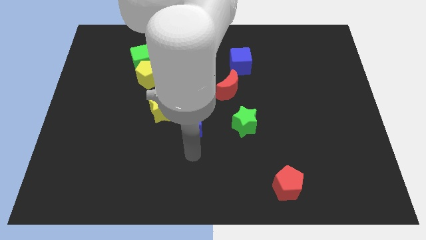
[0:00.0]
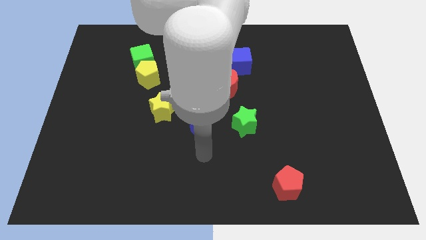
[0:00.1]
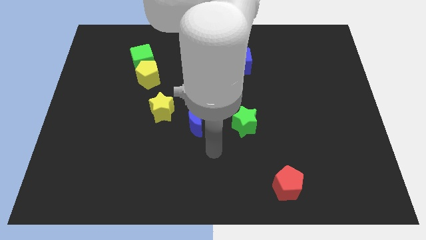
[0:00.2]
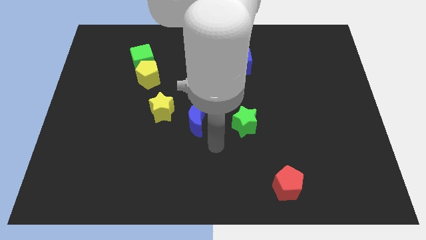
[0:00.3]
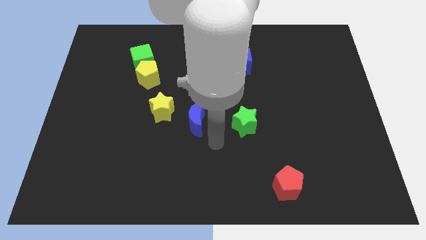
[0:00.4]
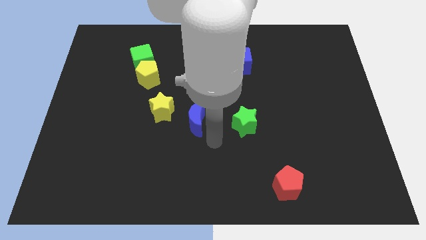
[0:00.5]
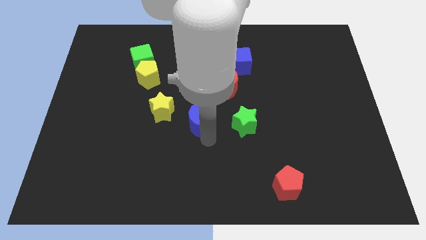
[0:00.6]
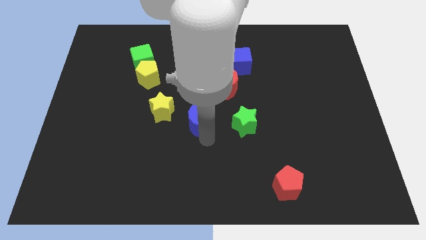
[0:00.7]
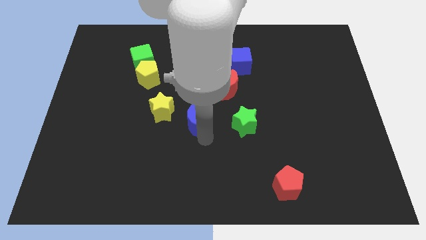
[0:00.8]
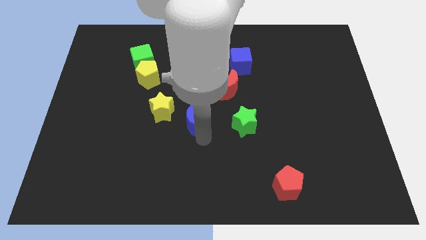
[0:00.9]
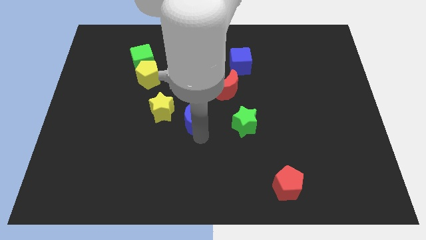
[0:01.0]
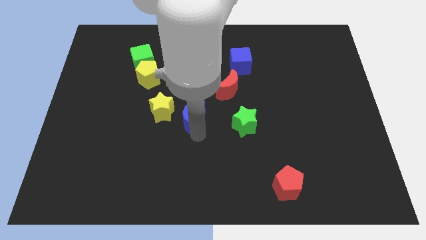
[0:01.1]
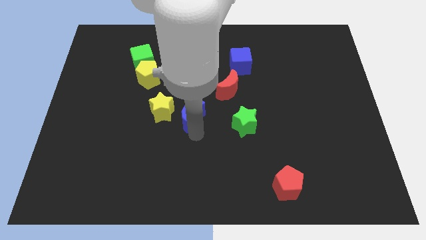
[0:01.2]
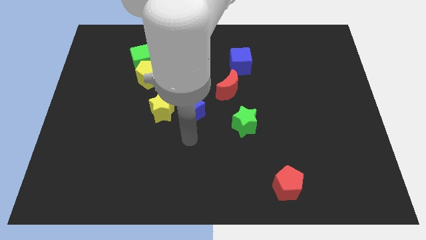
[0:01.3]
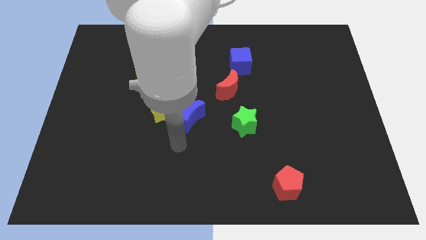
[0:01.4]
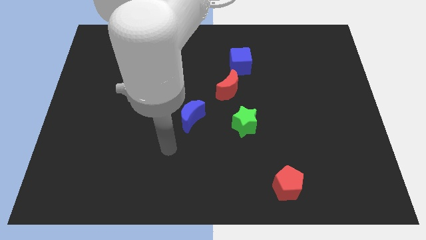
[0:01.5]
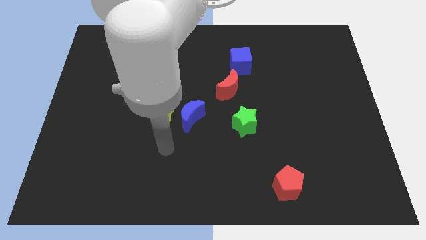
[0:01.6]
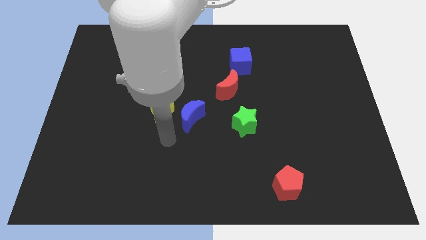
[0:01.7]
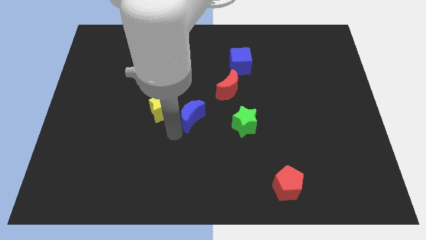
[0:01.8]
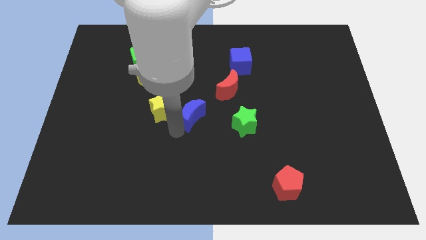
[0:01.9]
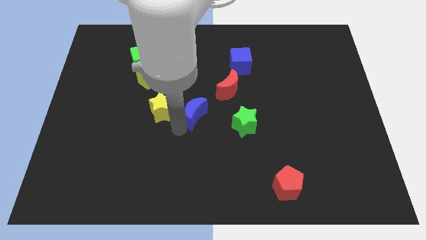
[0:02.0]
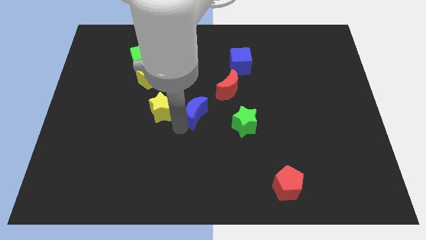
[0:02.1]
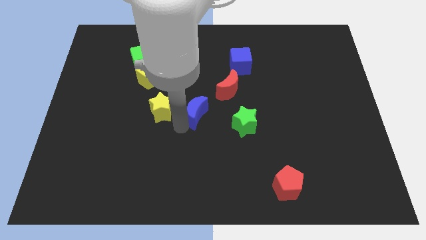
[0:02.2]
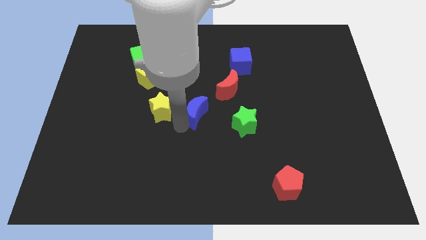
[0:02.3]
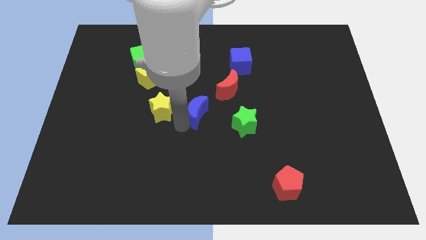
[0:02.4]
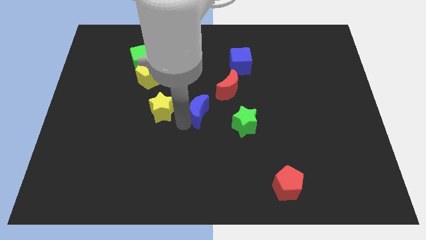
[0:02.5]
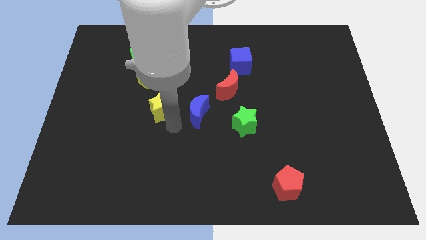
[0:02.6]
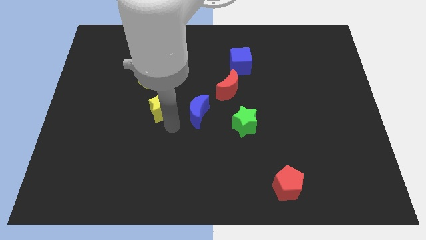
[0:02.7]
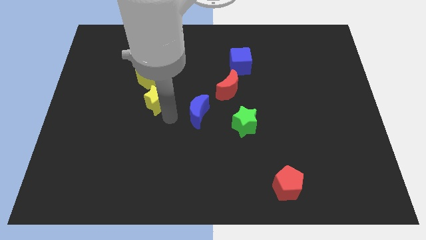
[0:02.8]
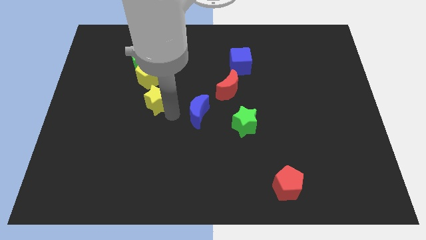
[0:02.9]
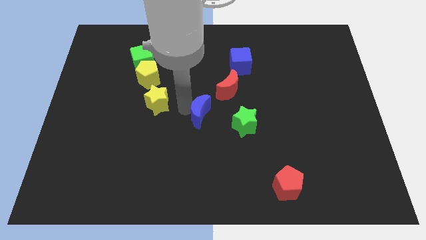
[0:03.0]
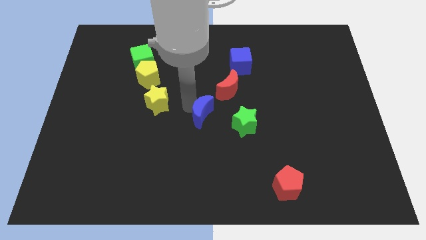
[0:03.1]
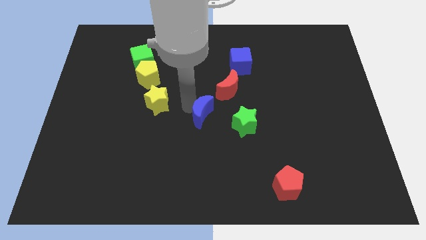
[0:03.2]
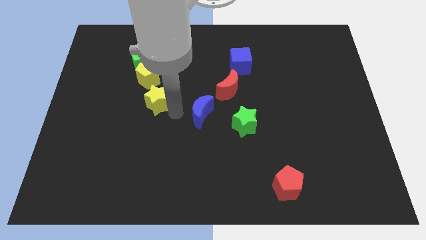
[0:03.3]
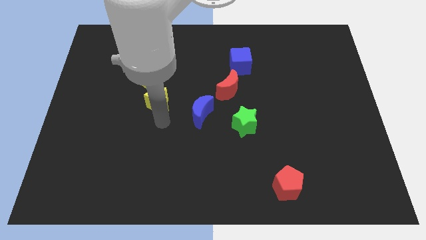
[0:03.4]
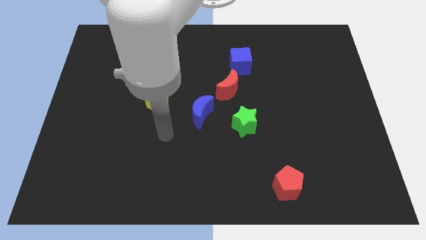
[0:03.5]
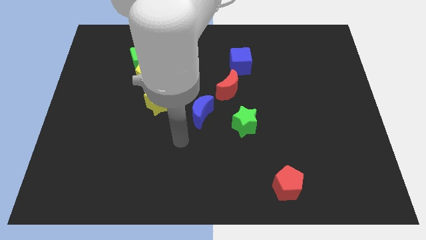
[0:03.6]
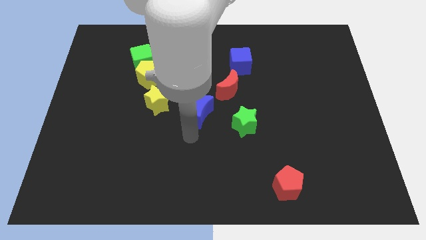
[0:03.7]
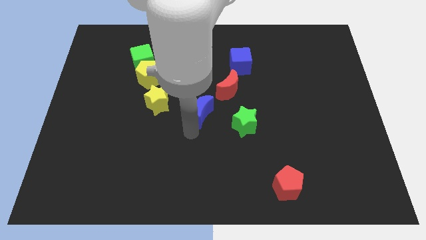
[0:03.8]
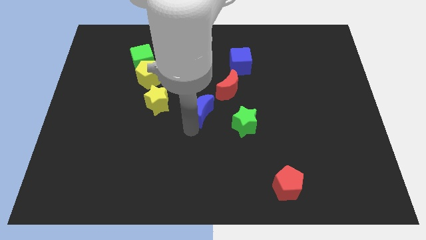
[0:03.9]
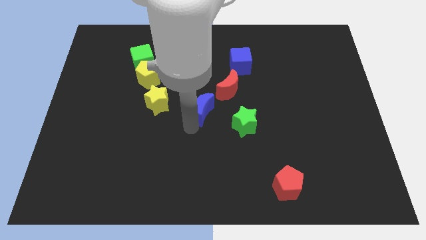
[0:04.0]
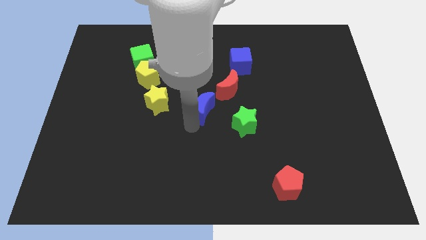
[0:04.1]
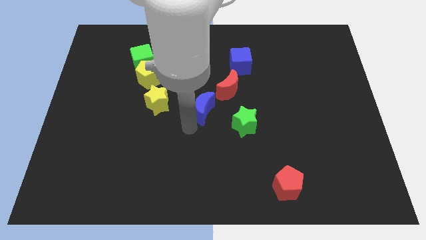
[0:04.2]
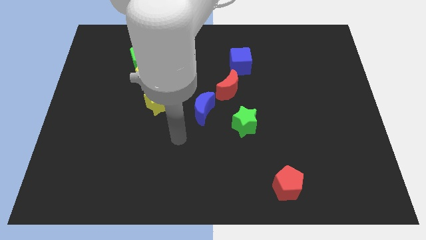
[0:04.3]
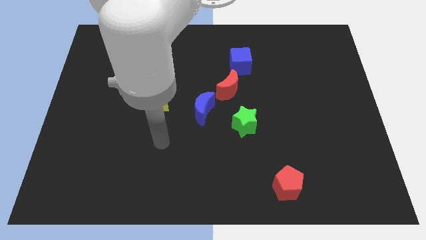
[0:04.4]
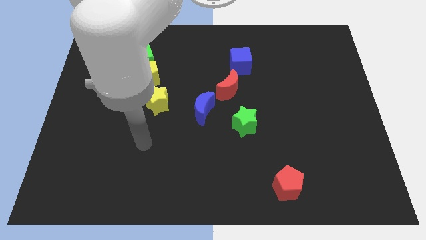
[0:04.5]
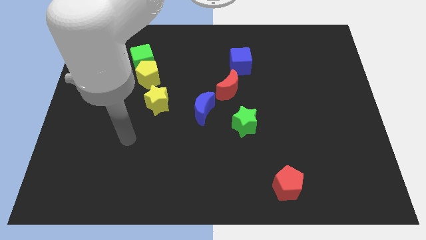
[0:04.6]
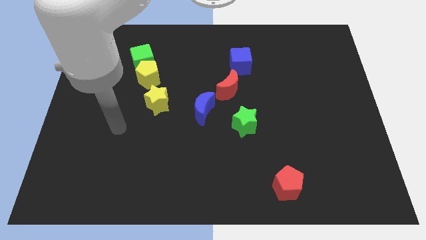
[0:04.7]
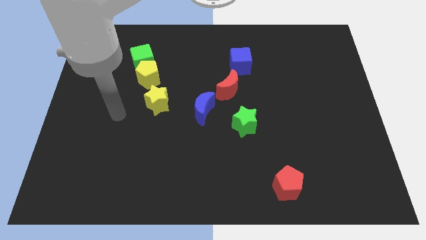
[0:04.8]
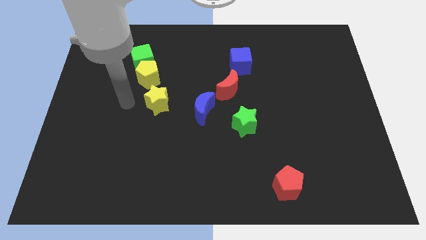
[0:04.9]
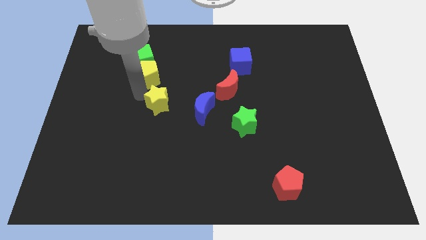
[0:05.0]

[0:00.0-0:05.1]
move blue moon below red moon

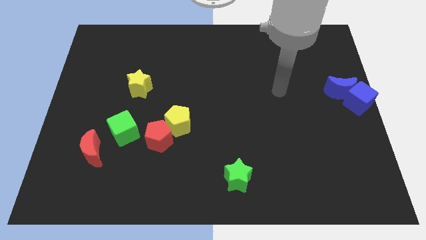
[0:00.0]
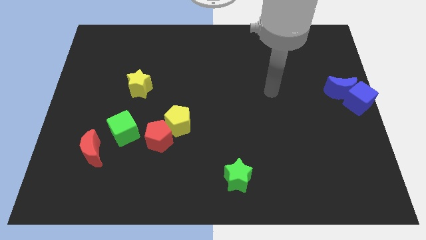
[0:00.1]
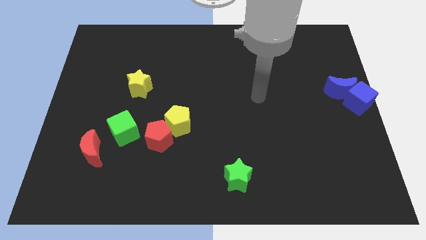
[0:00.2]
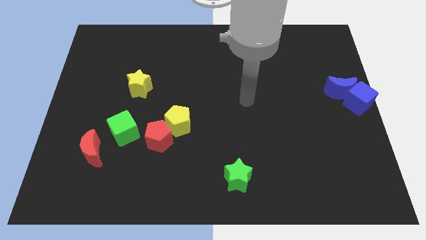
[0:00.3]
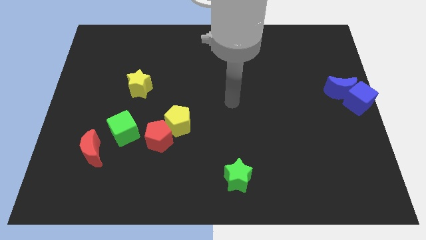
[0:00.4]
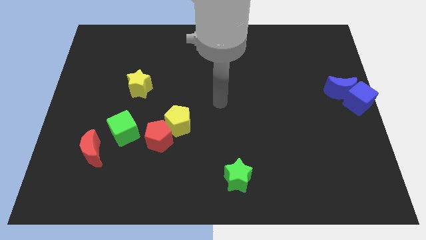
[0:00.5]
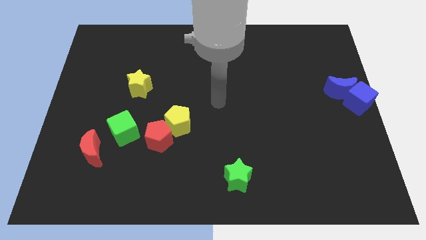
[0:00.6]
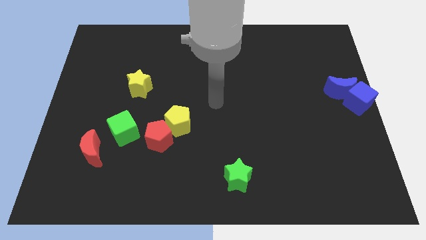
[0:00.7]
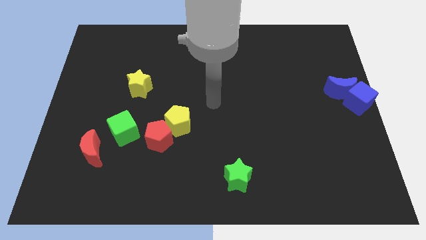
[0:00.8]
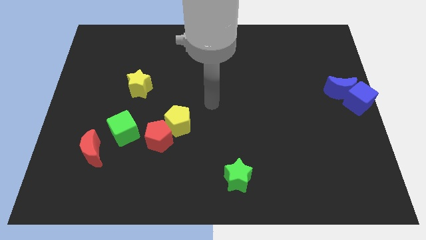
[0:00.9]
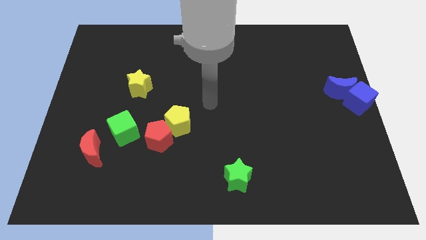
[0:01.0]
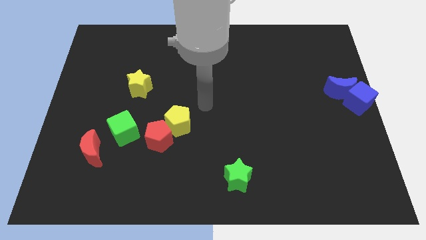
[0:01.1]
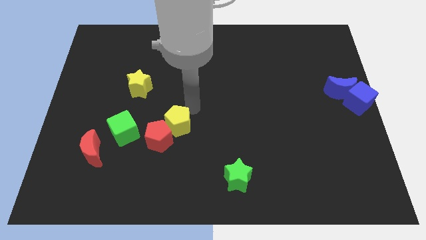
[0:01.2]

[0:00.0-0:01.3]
move your arm towards the yellow pentagon

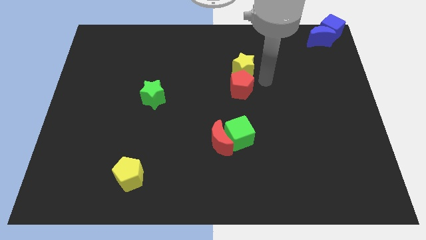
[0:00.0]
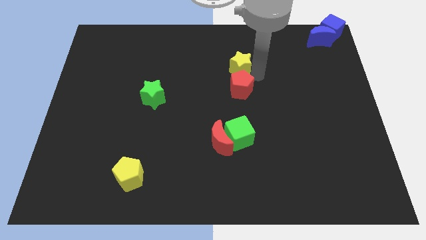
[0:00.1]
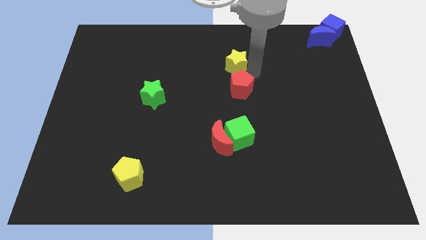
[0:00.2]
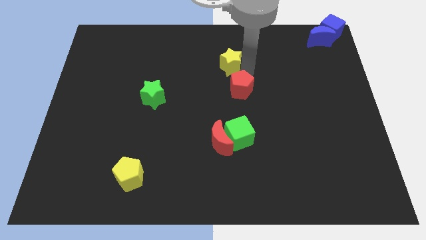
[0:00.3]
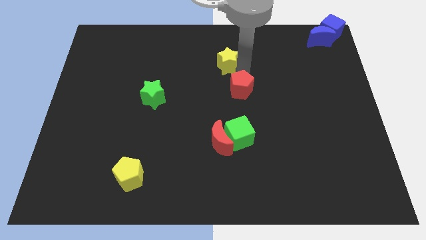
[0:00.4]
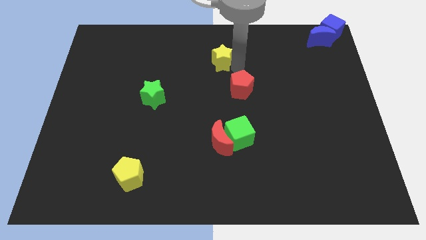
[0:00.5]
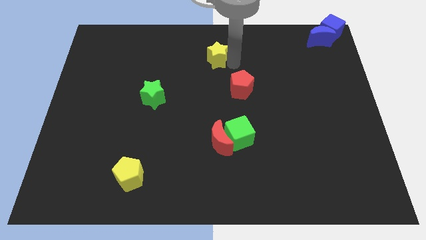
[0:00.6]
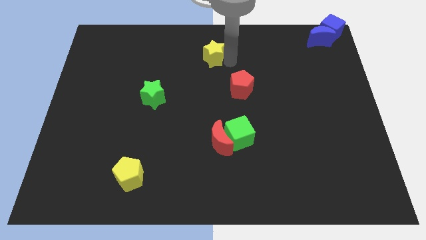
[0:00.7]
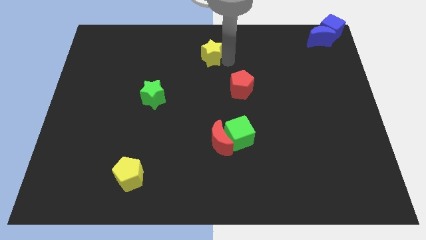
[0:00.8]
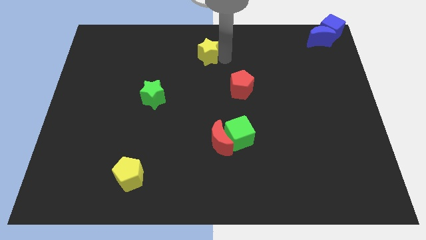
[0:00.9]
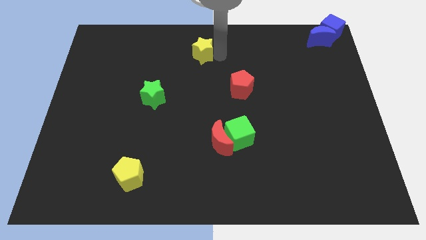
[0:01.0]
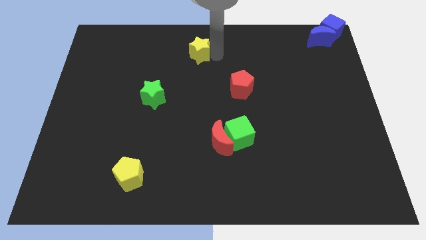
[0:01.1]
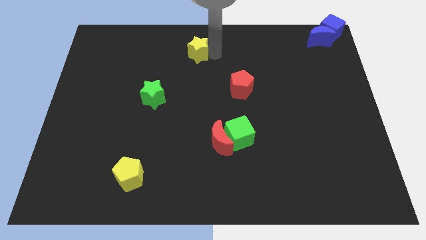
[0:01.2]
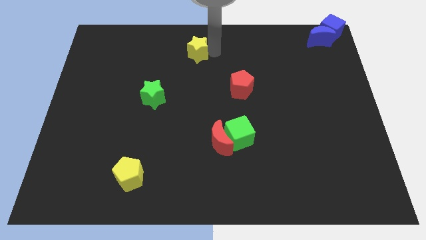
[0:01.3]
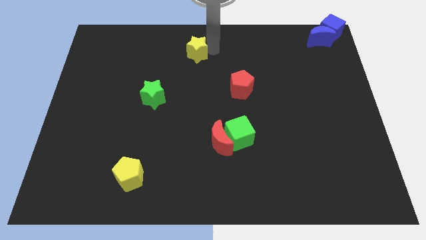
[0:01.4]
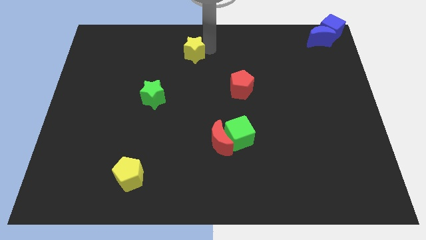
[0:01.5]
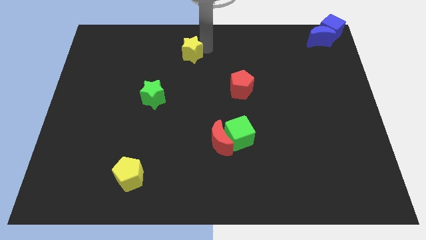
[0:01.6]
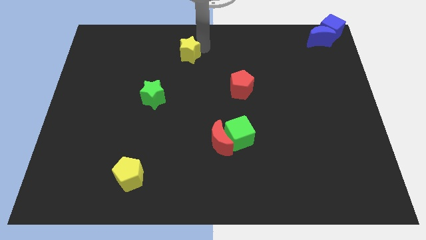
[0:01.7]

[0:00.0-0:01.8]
move the yellow star away from the red pentagon

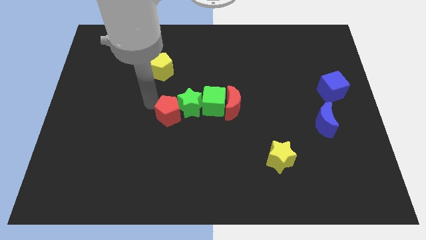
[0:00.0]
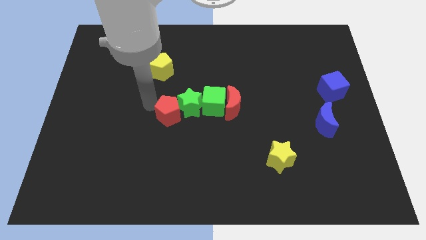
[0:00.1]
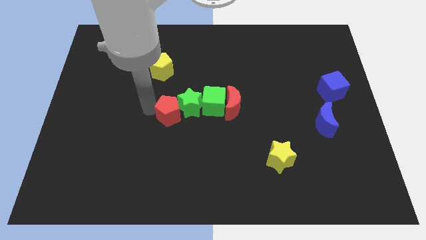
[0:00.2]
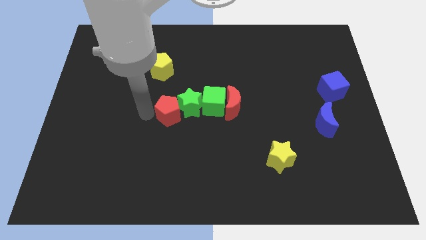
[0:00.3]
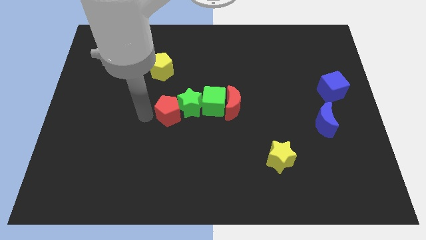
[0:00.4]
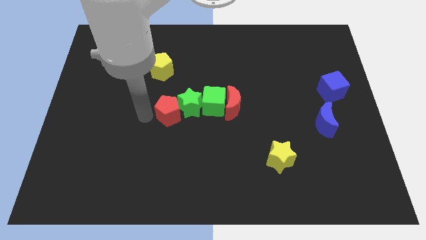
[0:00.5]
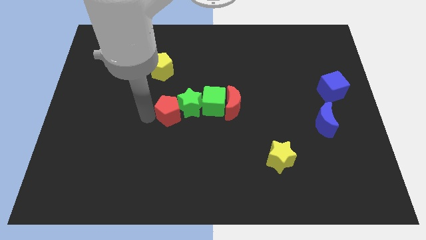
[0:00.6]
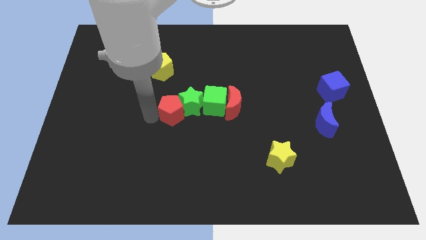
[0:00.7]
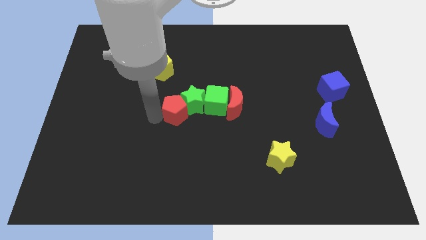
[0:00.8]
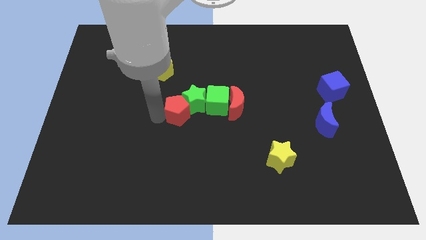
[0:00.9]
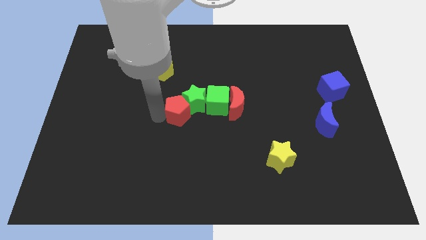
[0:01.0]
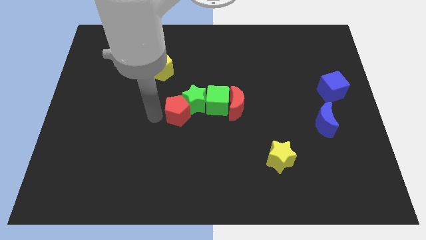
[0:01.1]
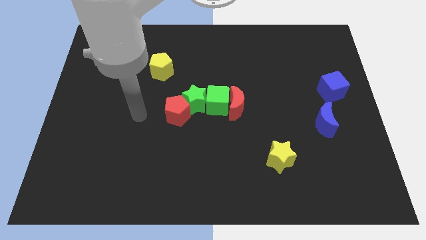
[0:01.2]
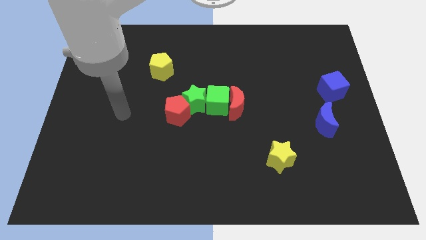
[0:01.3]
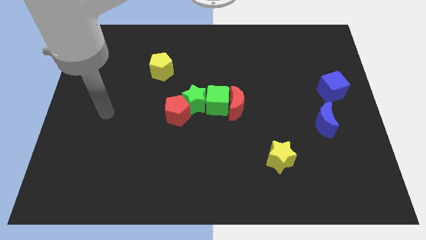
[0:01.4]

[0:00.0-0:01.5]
move the group of blocks to the center of the board
